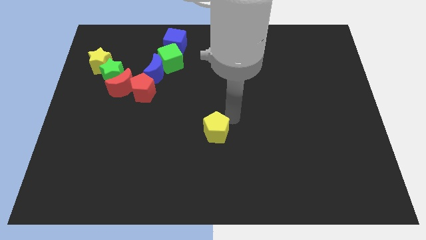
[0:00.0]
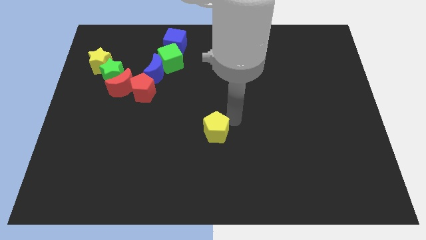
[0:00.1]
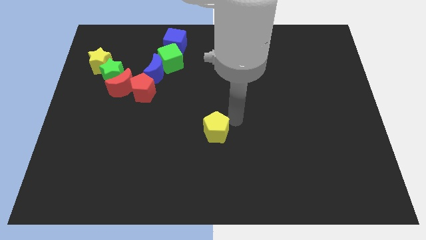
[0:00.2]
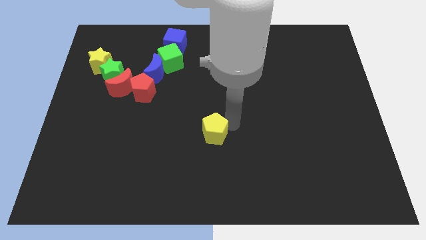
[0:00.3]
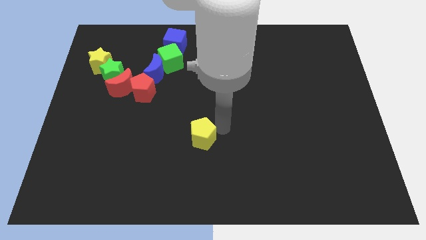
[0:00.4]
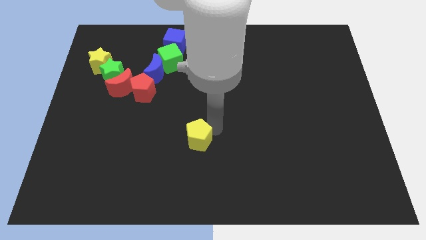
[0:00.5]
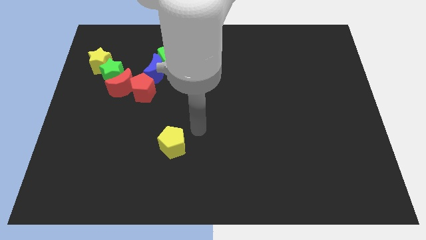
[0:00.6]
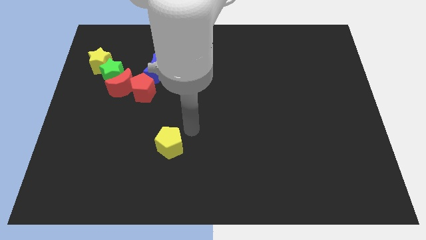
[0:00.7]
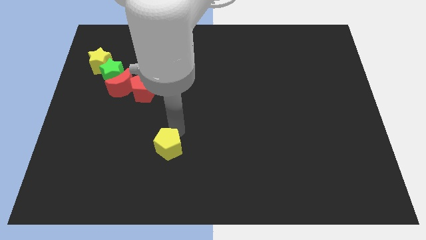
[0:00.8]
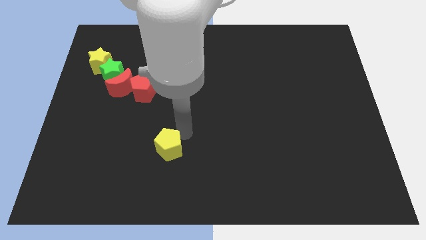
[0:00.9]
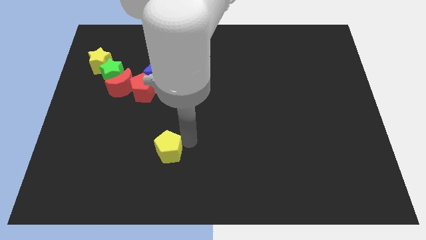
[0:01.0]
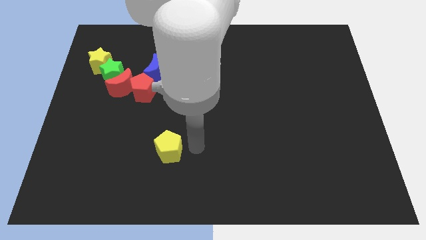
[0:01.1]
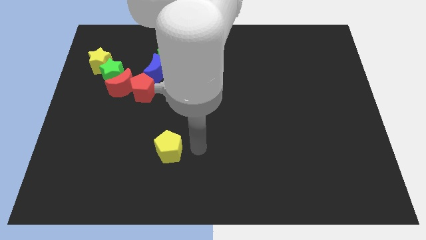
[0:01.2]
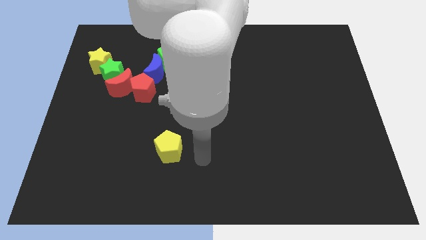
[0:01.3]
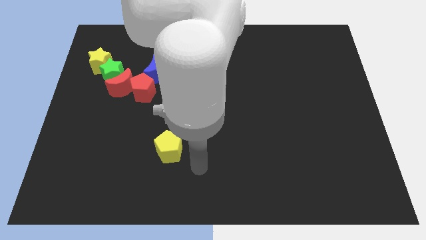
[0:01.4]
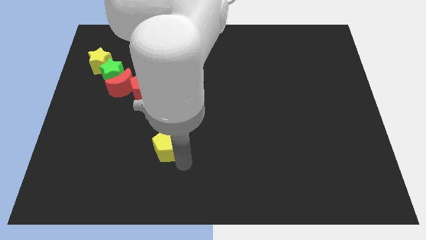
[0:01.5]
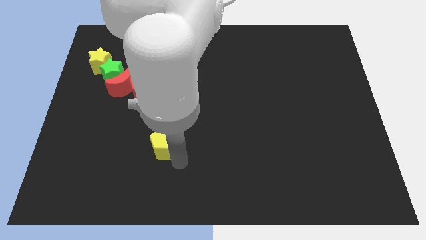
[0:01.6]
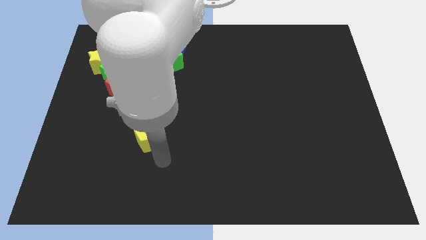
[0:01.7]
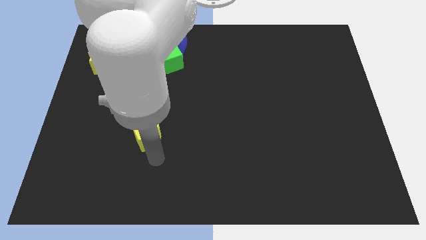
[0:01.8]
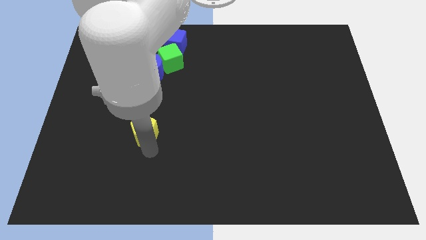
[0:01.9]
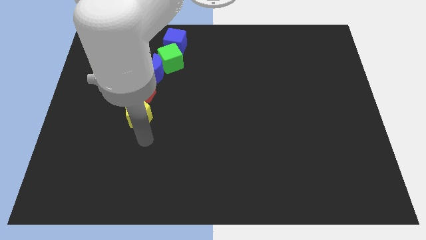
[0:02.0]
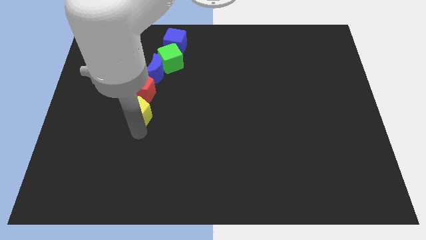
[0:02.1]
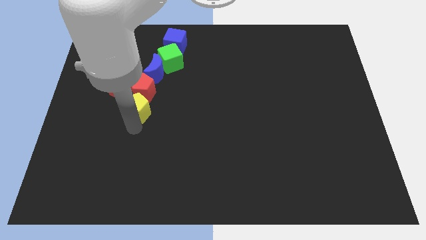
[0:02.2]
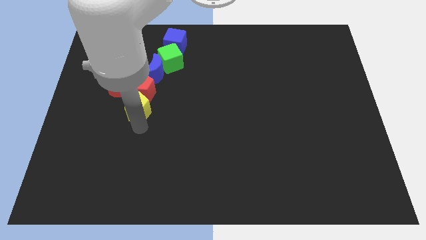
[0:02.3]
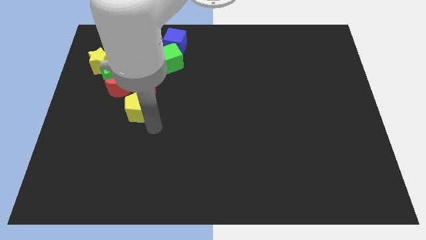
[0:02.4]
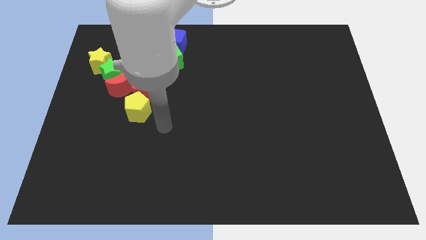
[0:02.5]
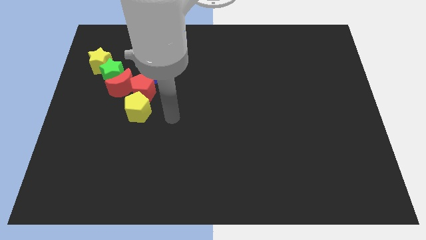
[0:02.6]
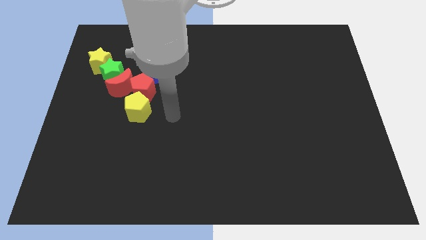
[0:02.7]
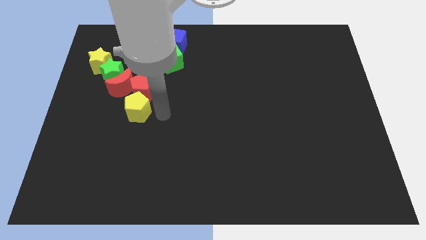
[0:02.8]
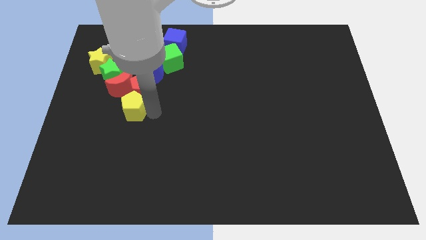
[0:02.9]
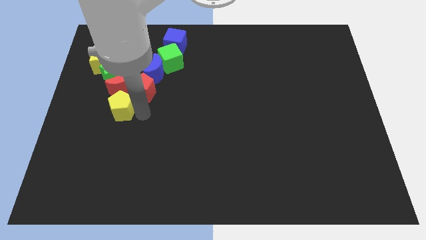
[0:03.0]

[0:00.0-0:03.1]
slide yellow pentagon towards red moon

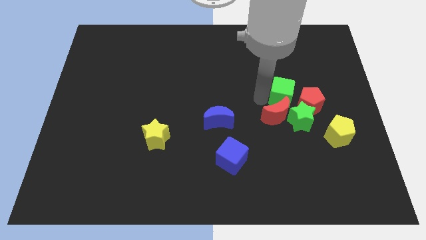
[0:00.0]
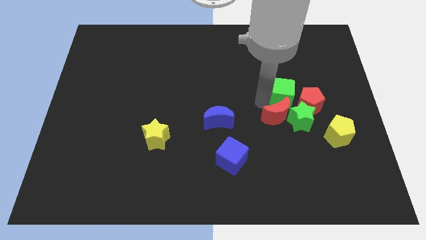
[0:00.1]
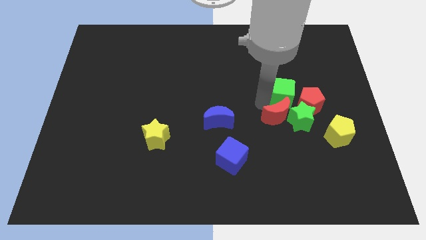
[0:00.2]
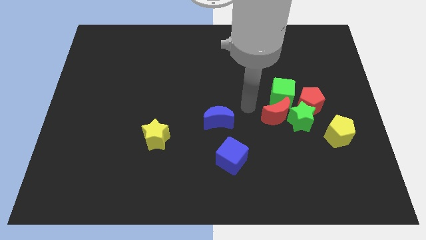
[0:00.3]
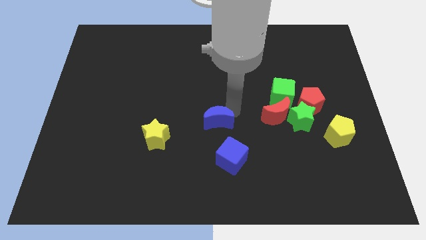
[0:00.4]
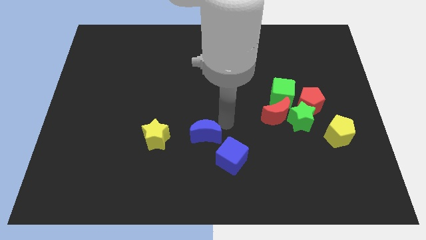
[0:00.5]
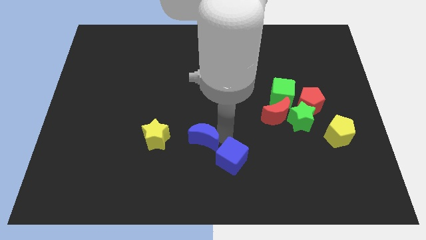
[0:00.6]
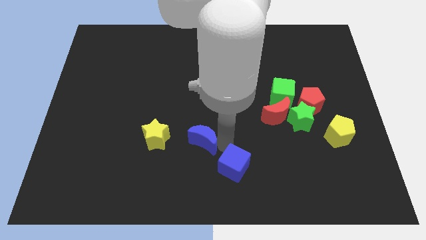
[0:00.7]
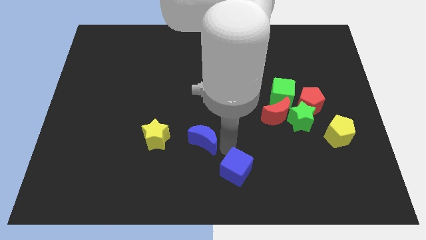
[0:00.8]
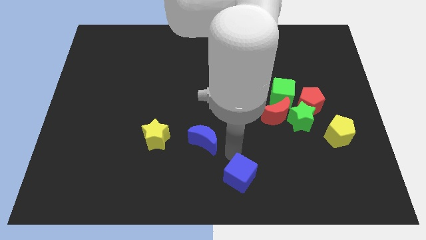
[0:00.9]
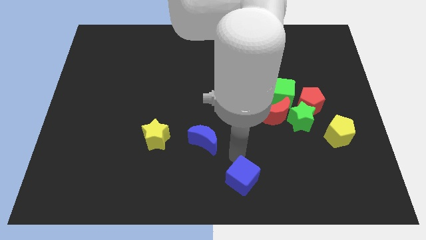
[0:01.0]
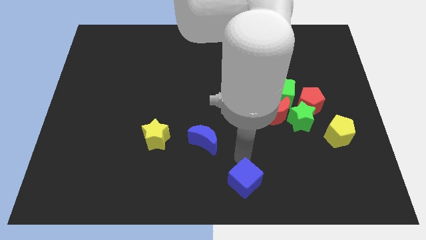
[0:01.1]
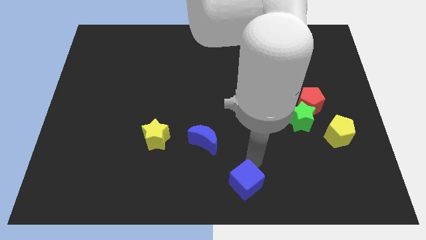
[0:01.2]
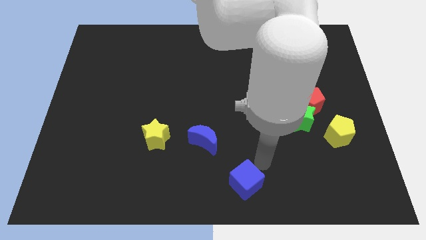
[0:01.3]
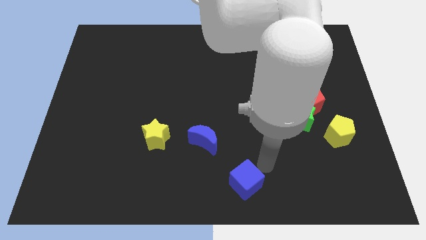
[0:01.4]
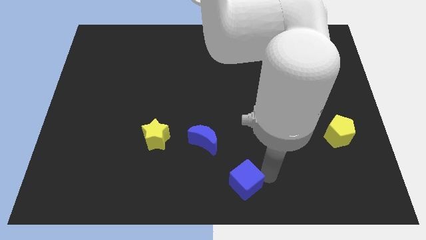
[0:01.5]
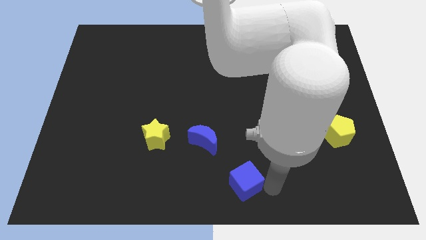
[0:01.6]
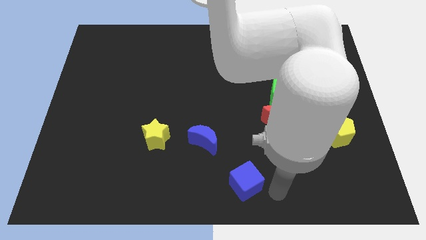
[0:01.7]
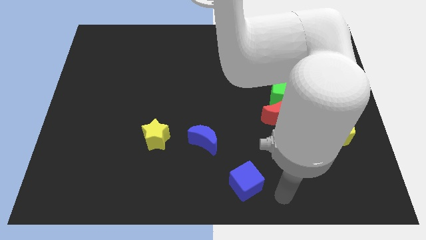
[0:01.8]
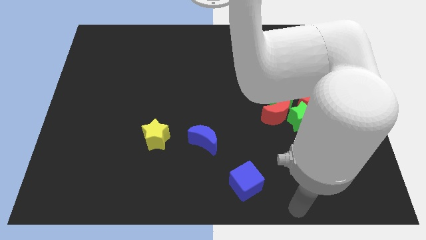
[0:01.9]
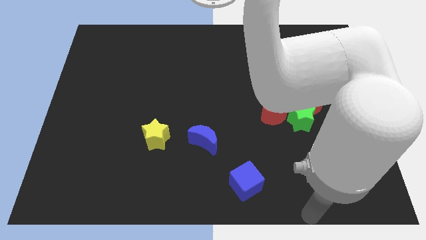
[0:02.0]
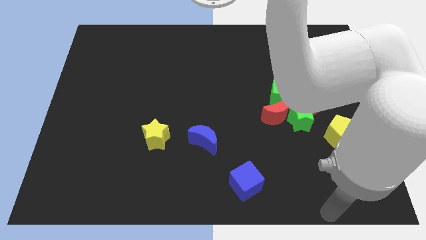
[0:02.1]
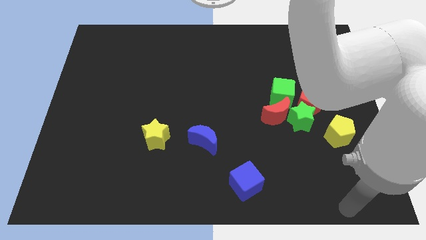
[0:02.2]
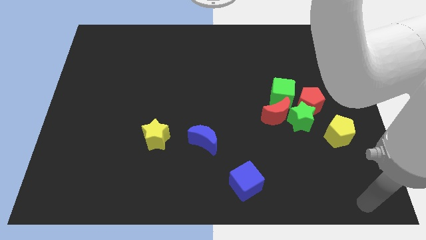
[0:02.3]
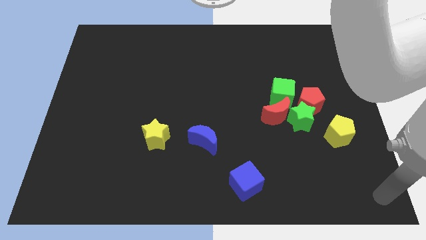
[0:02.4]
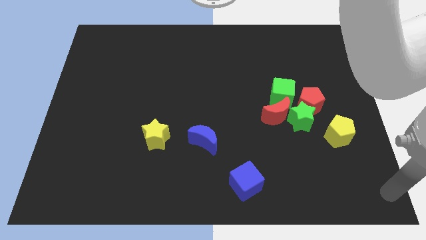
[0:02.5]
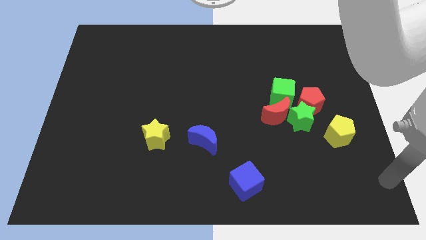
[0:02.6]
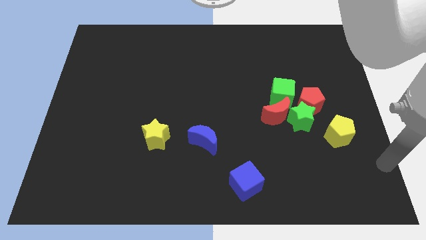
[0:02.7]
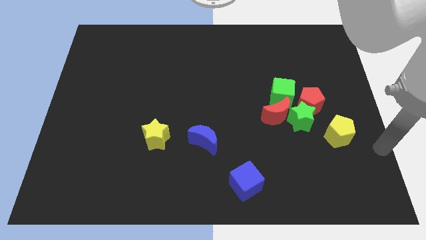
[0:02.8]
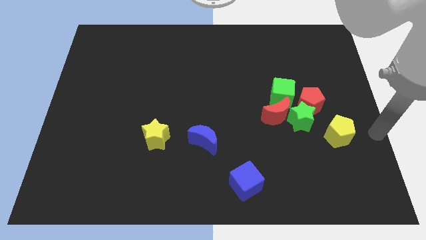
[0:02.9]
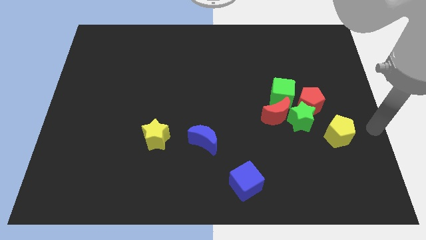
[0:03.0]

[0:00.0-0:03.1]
slide the blue cube towards the bottom center of the board

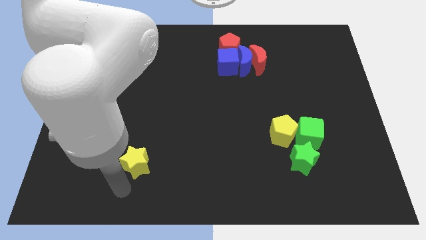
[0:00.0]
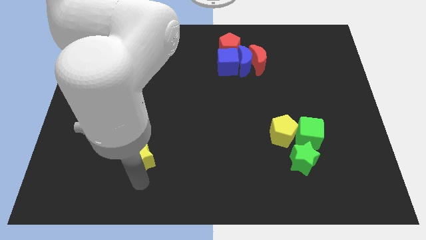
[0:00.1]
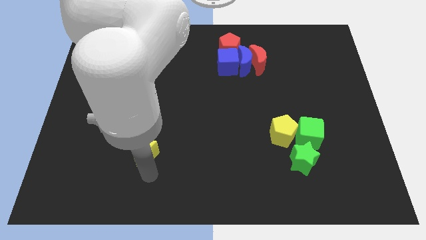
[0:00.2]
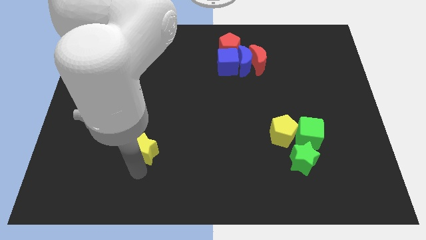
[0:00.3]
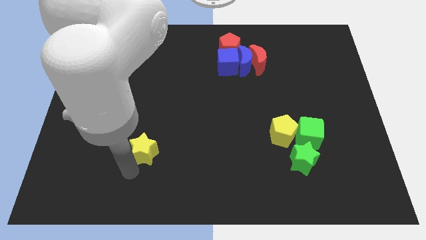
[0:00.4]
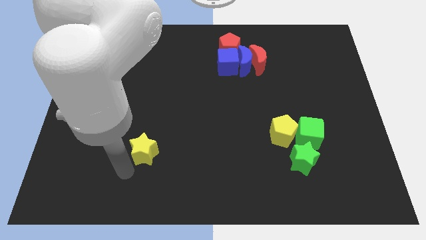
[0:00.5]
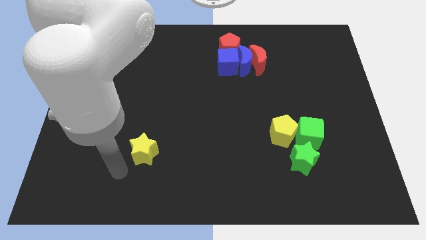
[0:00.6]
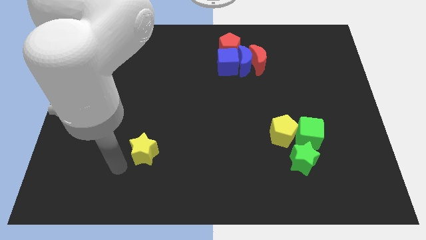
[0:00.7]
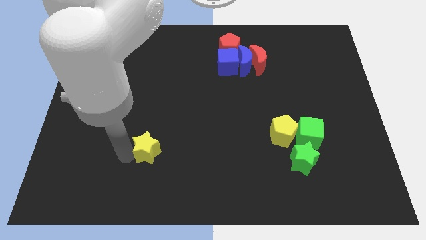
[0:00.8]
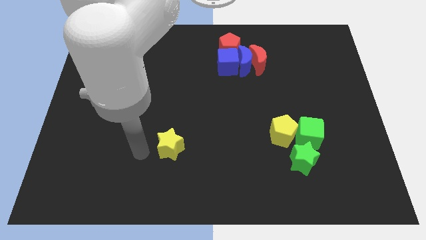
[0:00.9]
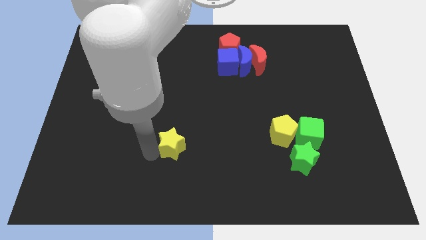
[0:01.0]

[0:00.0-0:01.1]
push the yellow star digonally to the blue cube

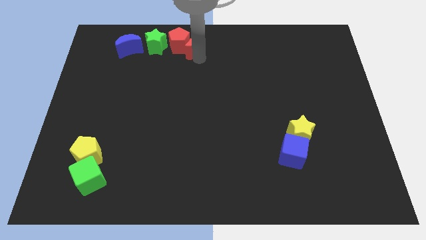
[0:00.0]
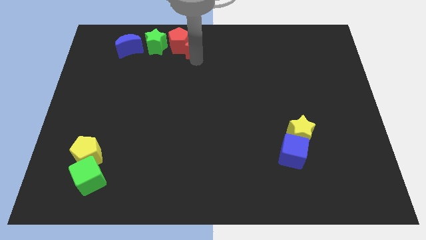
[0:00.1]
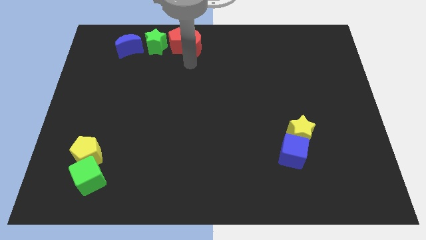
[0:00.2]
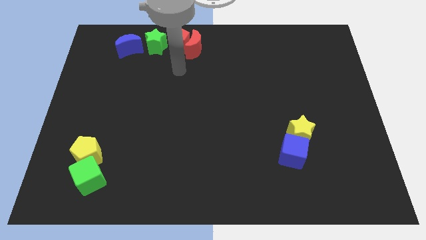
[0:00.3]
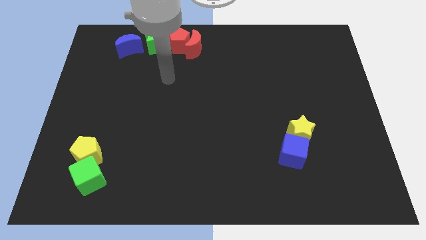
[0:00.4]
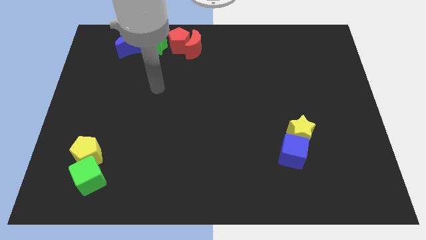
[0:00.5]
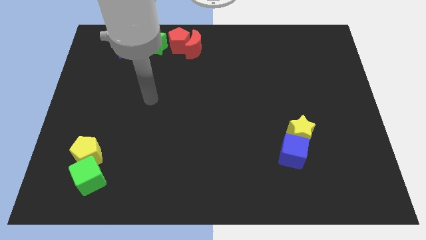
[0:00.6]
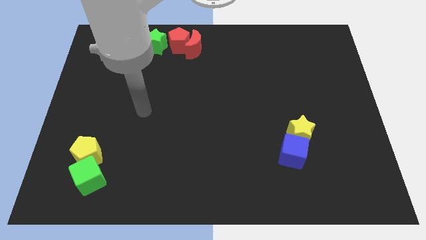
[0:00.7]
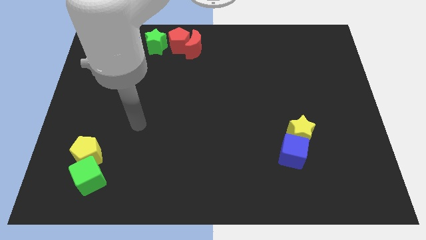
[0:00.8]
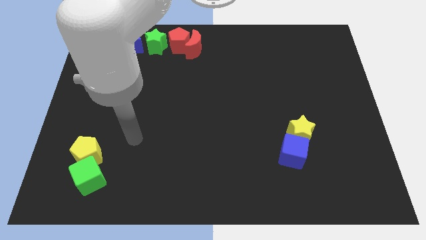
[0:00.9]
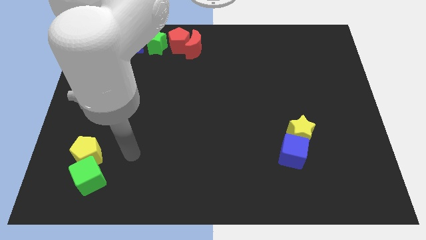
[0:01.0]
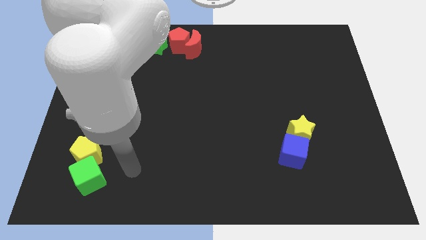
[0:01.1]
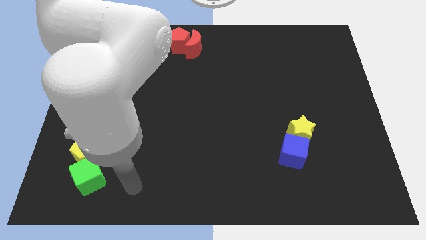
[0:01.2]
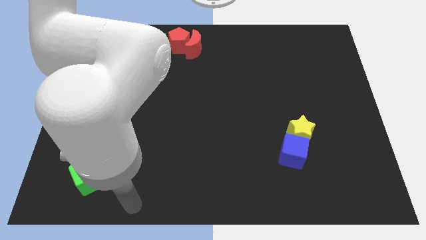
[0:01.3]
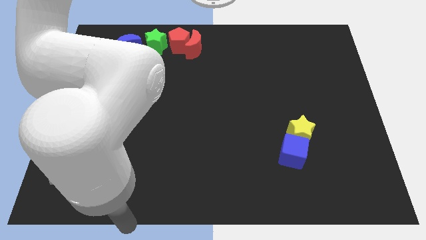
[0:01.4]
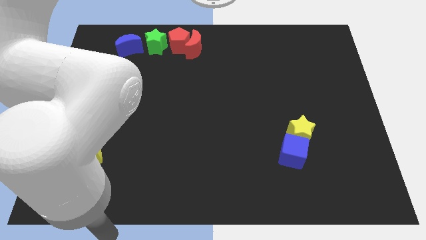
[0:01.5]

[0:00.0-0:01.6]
move your arm away from the red moon

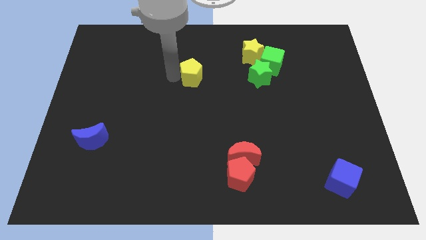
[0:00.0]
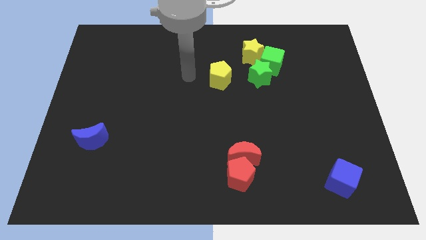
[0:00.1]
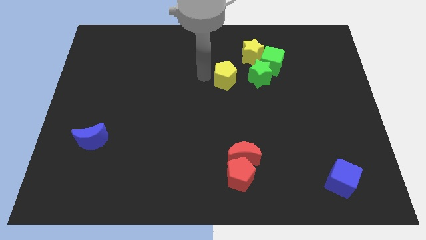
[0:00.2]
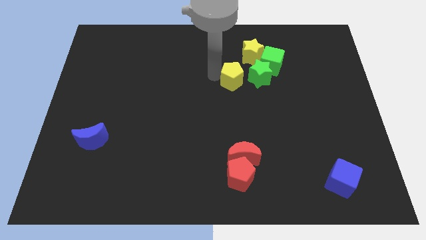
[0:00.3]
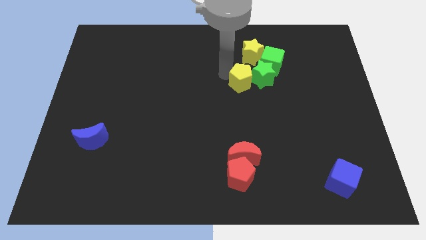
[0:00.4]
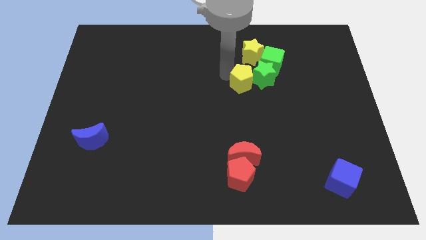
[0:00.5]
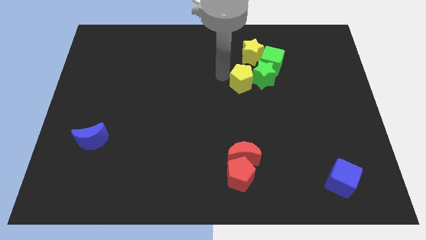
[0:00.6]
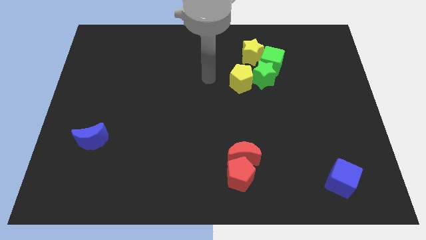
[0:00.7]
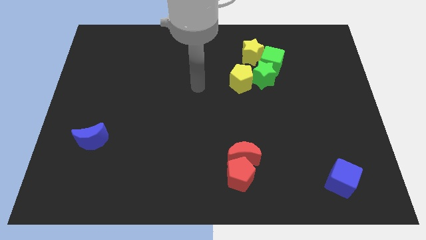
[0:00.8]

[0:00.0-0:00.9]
push the yellow pentagon into the green star
